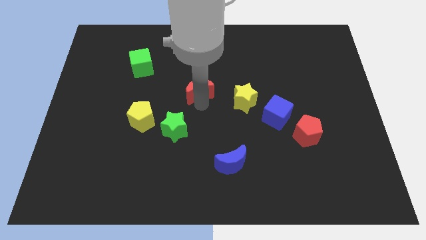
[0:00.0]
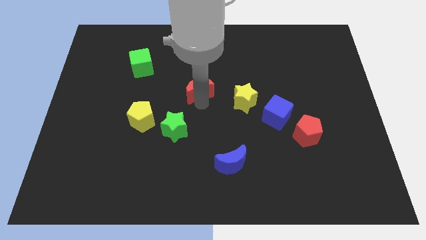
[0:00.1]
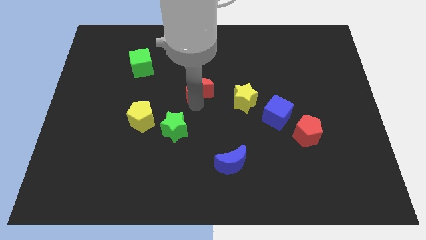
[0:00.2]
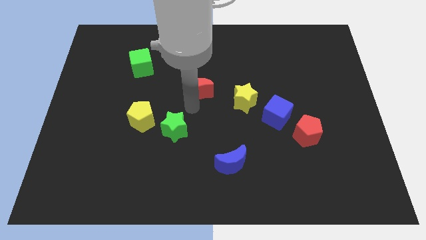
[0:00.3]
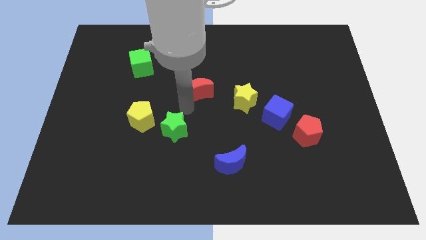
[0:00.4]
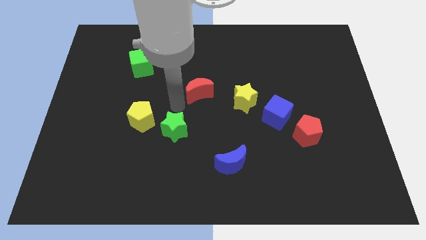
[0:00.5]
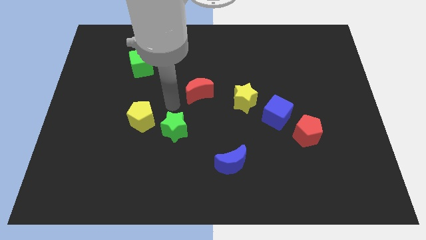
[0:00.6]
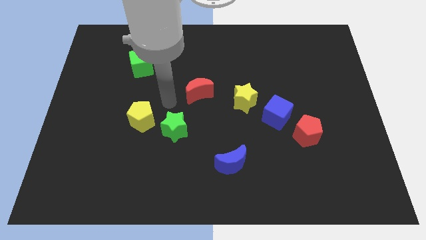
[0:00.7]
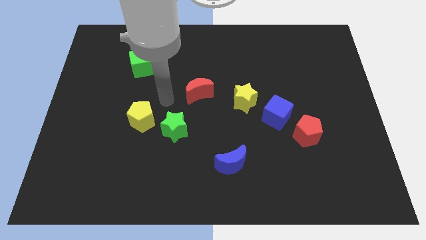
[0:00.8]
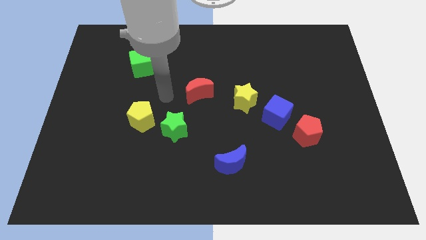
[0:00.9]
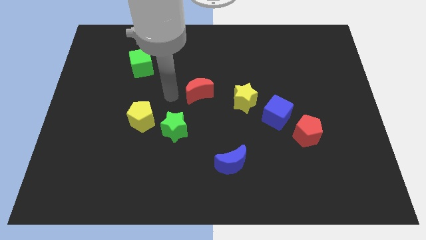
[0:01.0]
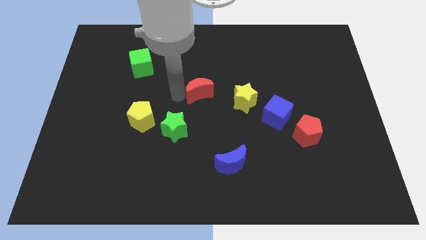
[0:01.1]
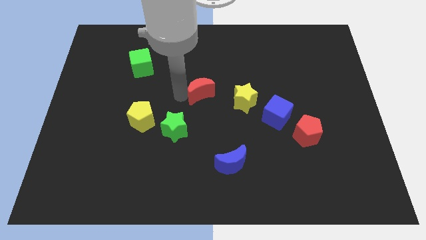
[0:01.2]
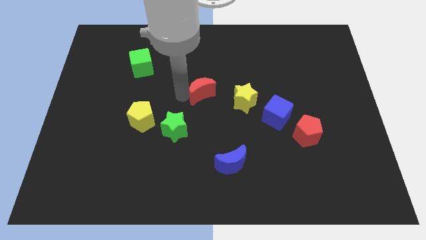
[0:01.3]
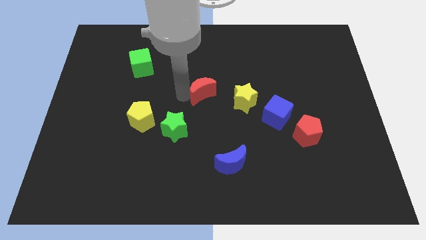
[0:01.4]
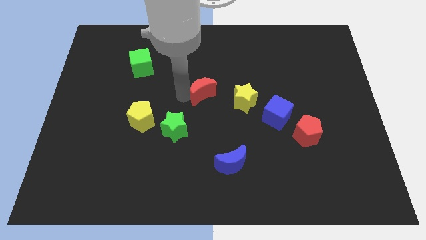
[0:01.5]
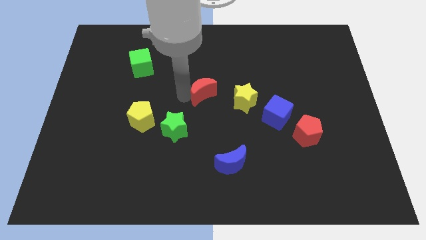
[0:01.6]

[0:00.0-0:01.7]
slide the red moon towards the yellow star

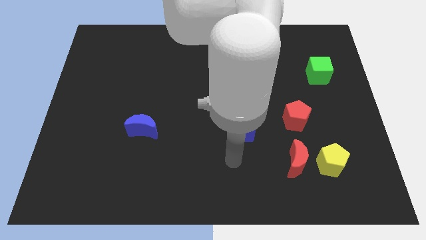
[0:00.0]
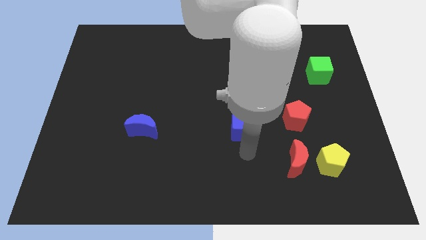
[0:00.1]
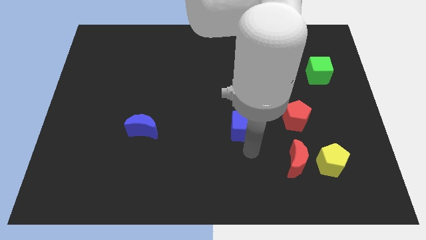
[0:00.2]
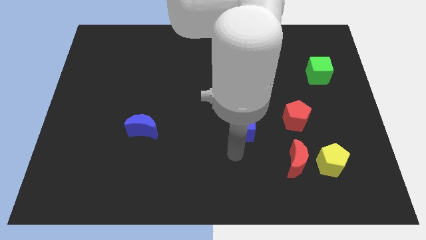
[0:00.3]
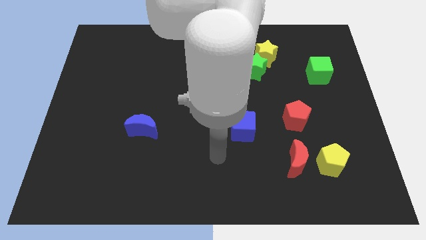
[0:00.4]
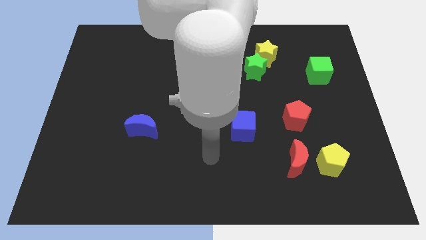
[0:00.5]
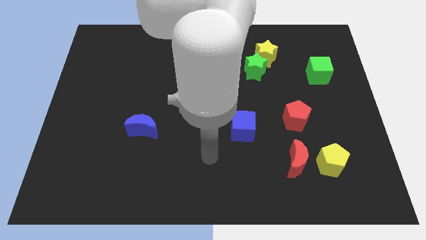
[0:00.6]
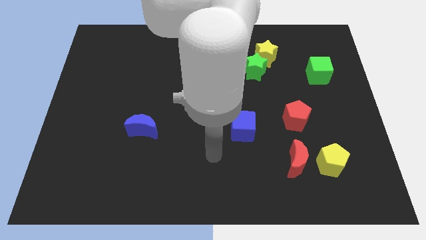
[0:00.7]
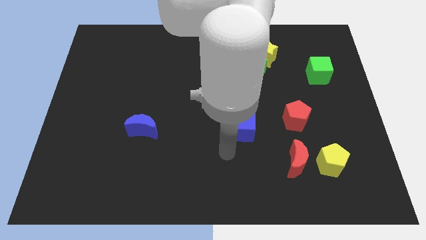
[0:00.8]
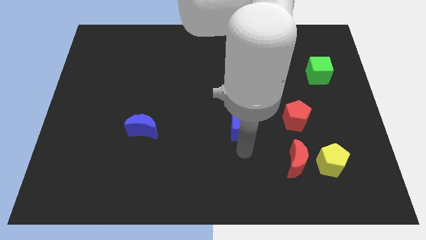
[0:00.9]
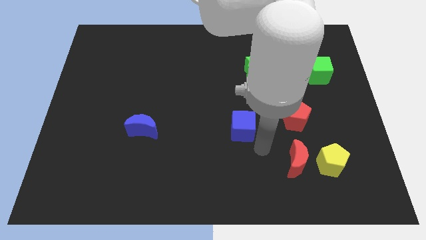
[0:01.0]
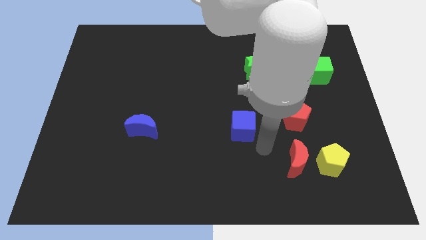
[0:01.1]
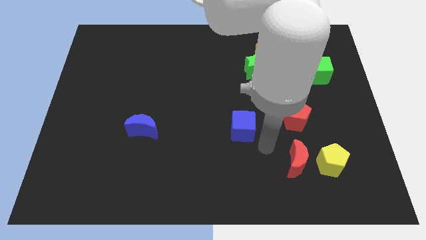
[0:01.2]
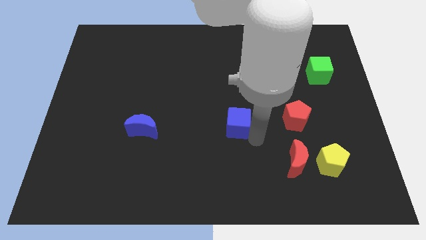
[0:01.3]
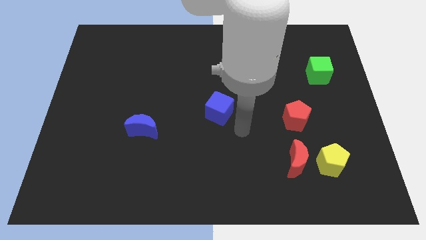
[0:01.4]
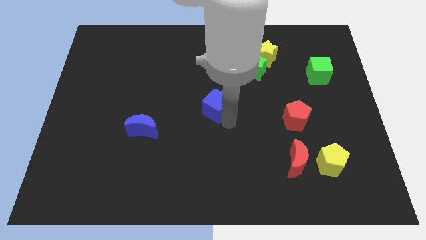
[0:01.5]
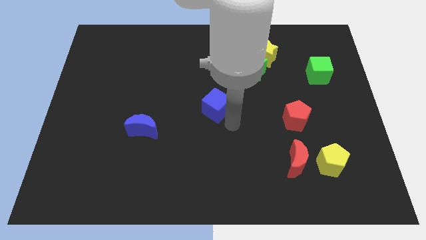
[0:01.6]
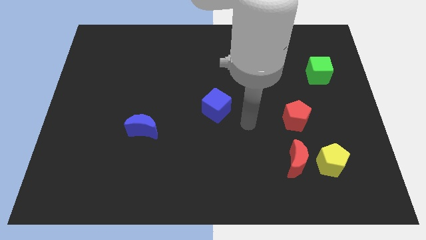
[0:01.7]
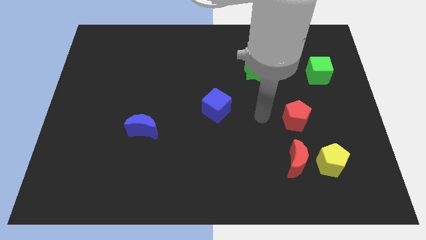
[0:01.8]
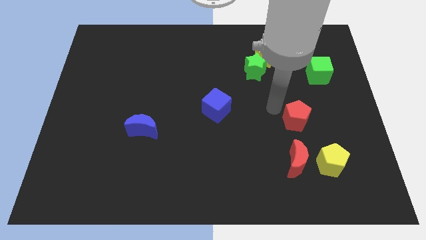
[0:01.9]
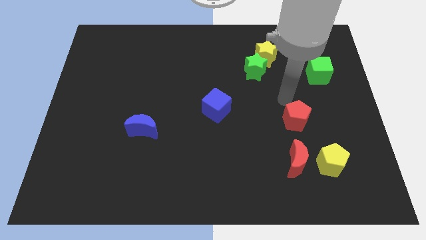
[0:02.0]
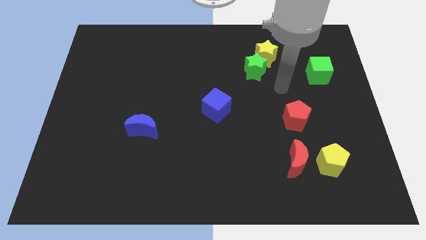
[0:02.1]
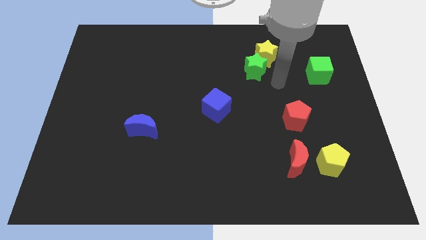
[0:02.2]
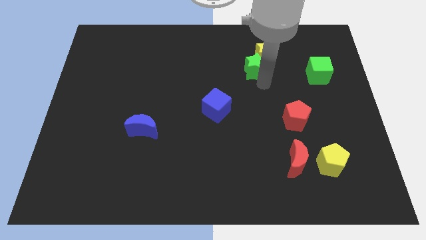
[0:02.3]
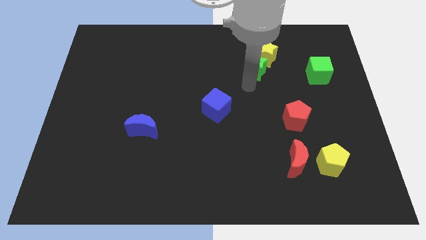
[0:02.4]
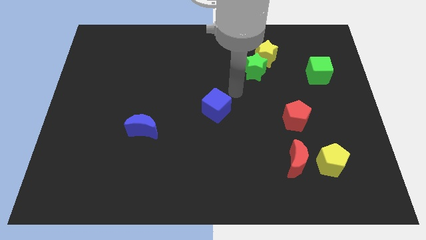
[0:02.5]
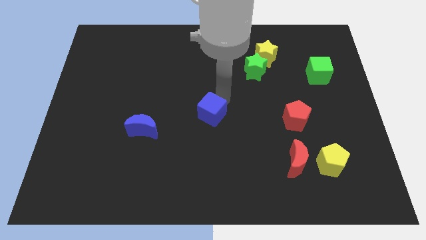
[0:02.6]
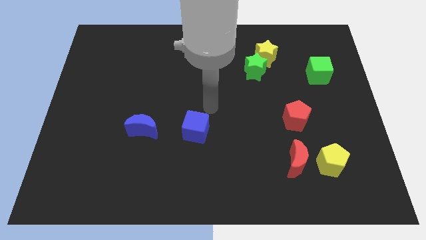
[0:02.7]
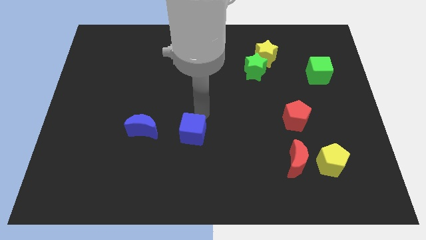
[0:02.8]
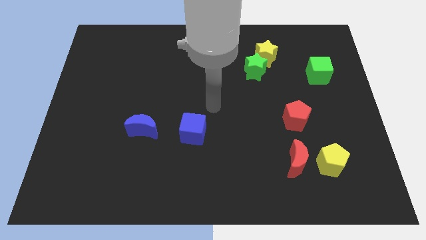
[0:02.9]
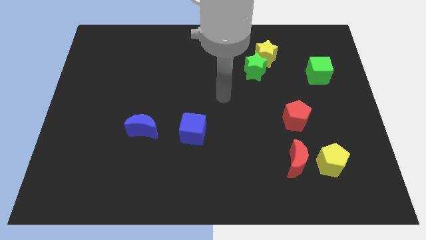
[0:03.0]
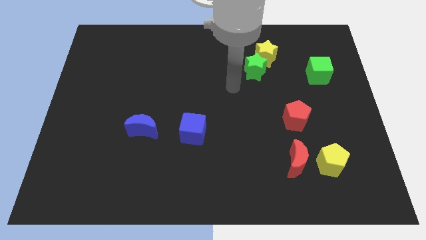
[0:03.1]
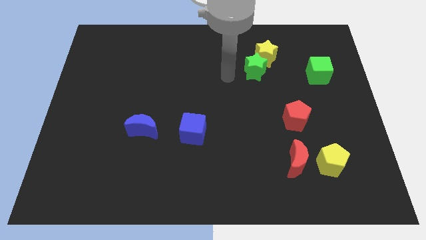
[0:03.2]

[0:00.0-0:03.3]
place the blue cube parallel to blue moon

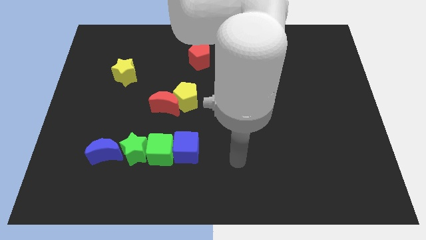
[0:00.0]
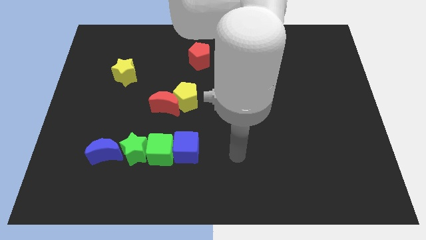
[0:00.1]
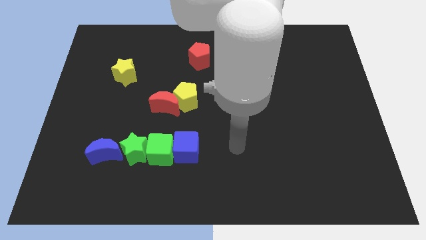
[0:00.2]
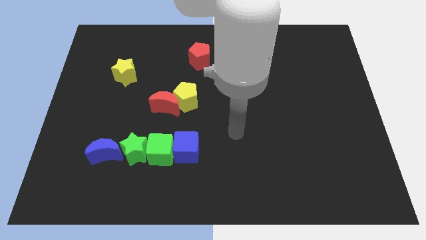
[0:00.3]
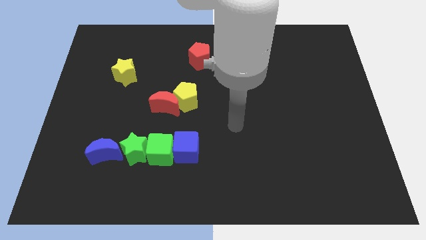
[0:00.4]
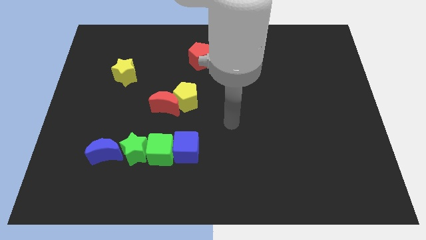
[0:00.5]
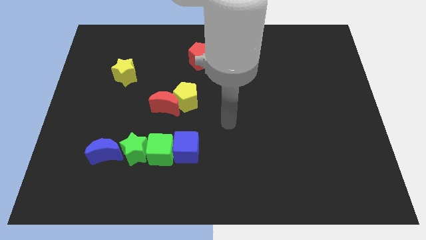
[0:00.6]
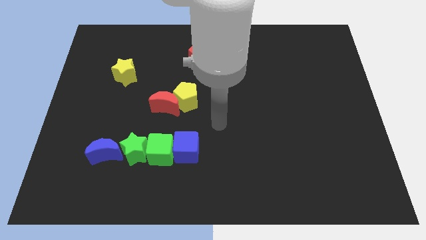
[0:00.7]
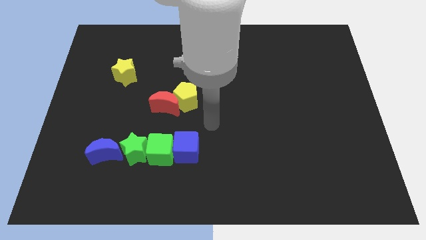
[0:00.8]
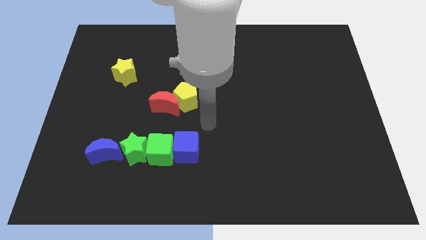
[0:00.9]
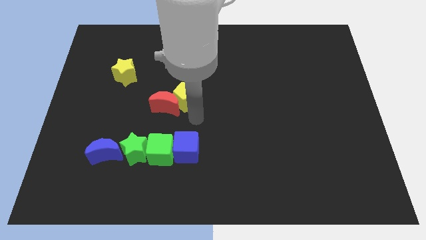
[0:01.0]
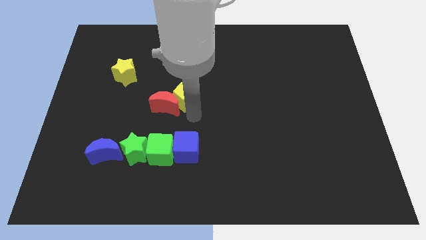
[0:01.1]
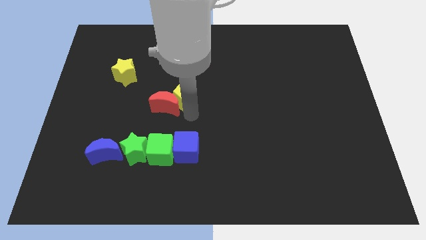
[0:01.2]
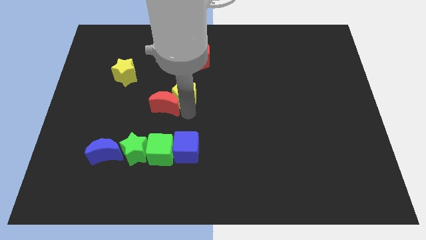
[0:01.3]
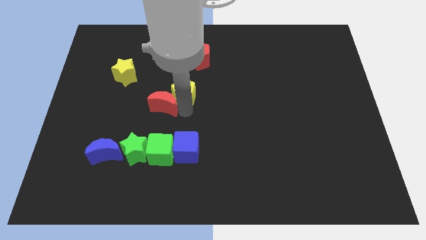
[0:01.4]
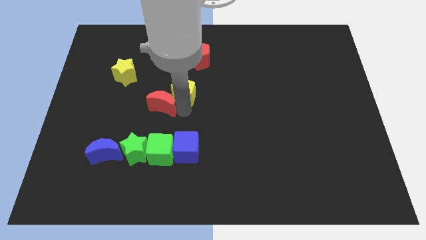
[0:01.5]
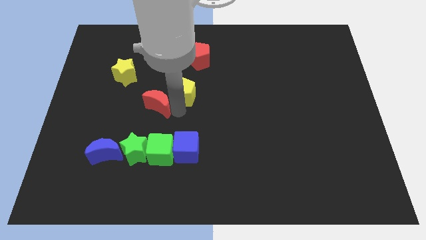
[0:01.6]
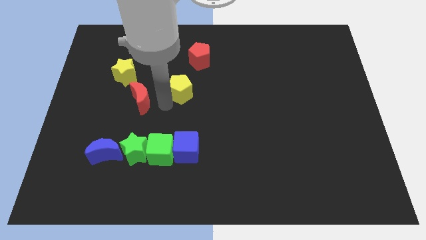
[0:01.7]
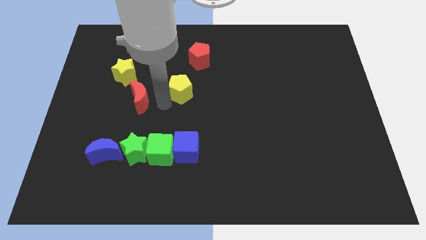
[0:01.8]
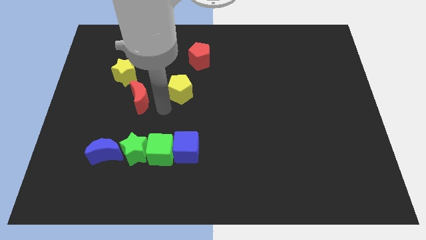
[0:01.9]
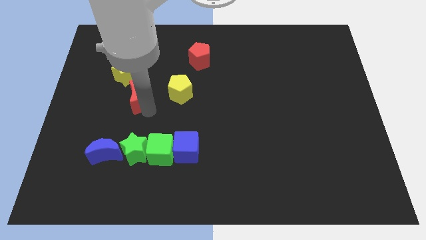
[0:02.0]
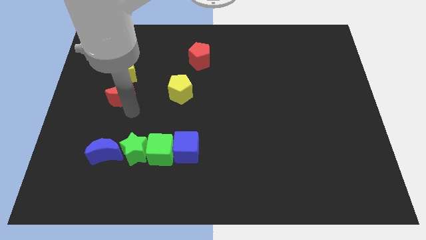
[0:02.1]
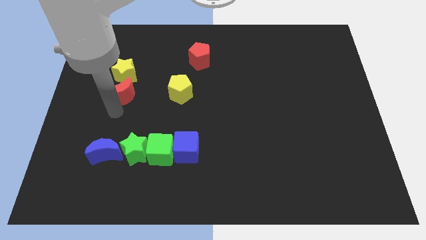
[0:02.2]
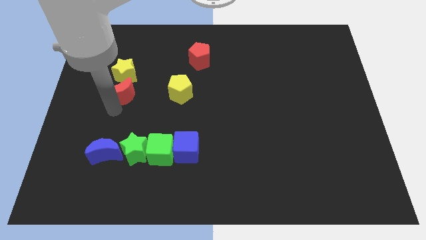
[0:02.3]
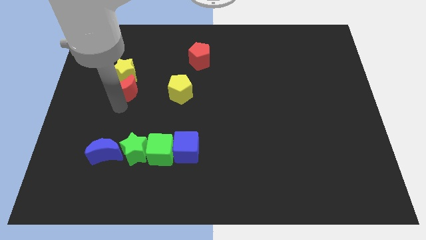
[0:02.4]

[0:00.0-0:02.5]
separate the red moon from the yellow pentagon

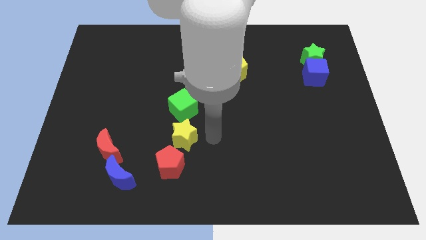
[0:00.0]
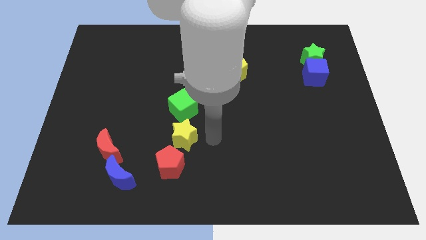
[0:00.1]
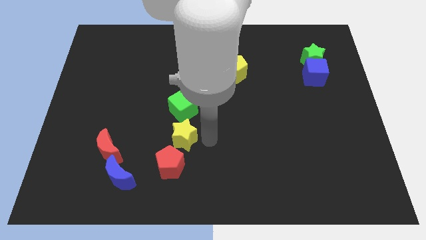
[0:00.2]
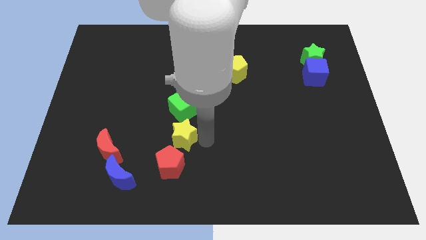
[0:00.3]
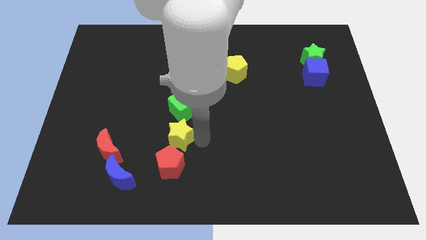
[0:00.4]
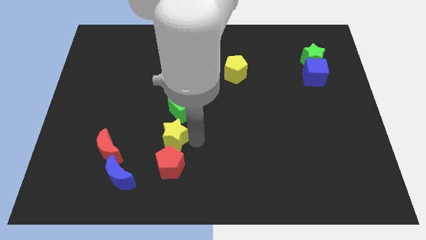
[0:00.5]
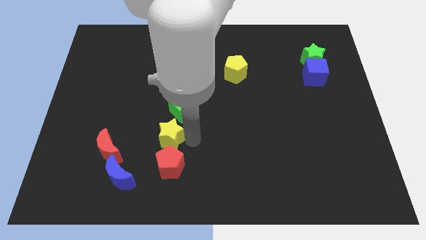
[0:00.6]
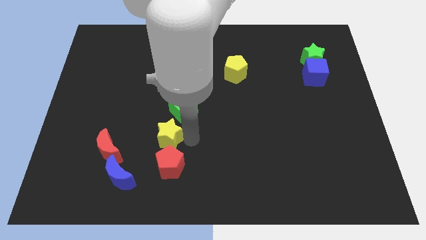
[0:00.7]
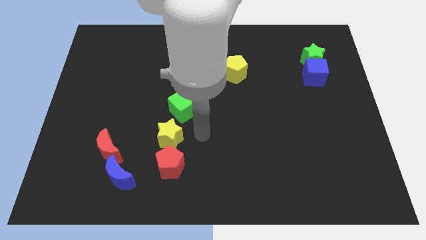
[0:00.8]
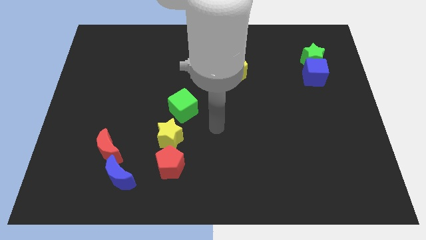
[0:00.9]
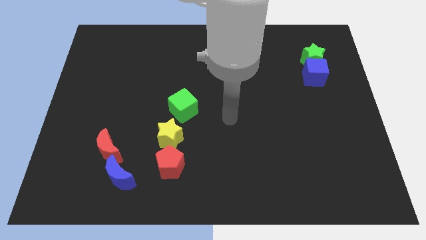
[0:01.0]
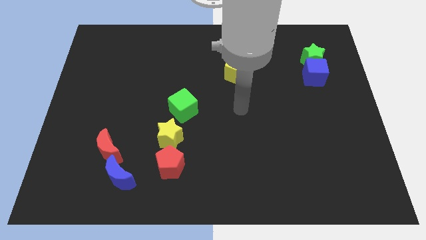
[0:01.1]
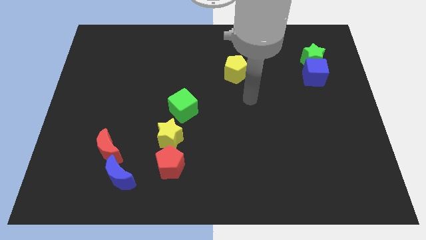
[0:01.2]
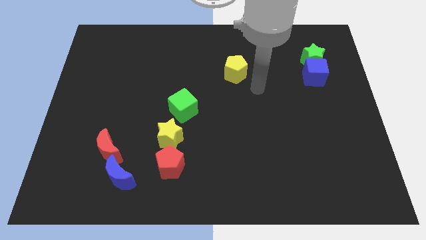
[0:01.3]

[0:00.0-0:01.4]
put the yellow star vertically above the red pentagon
